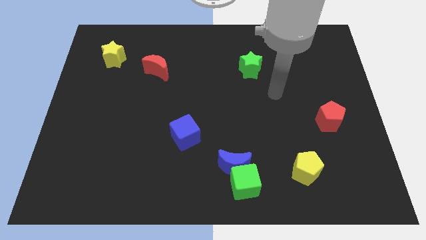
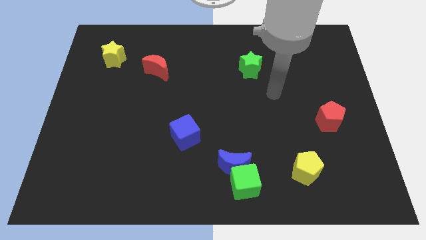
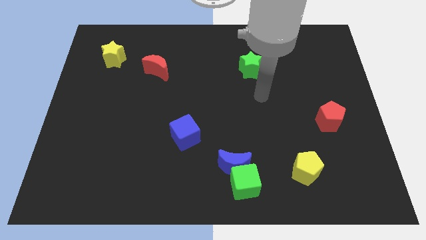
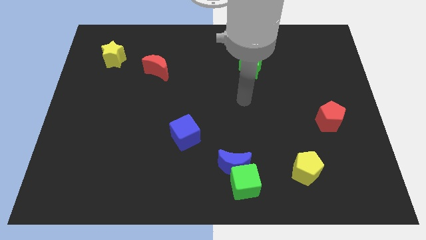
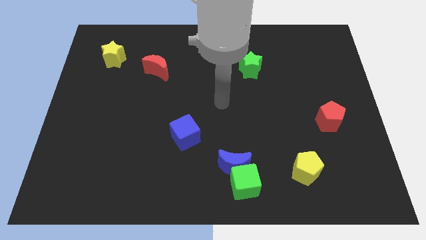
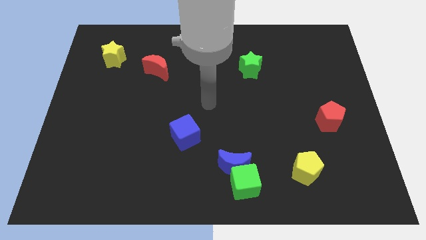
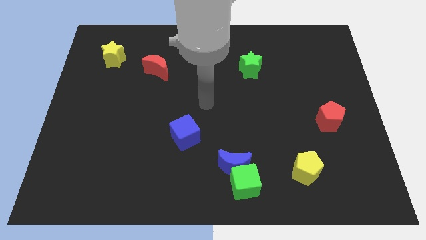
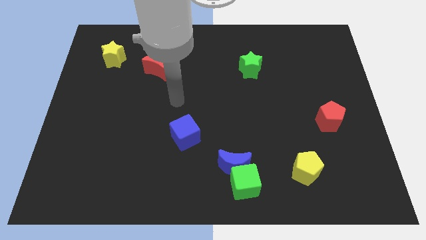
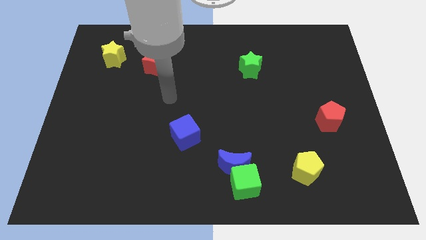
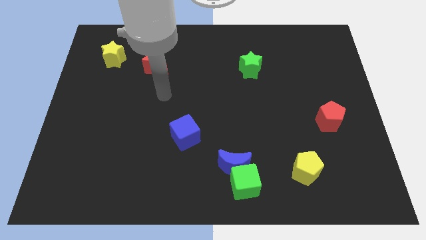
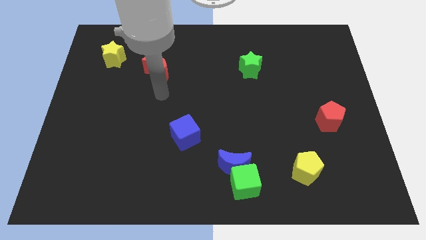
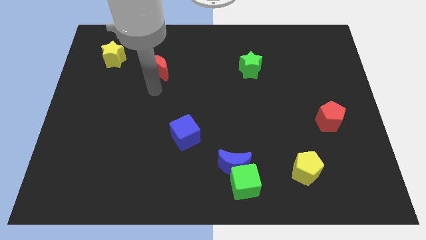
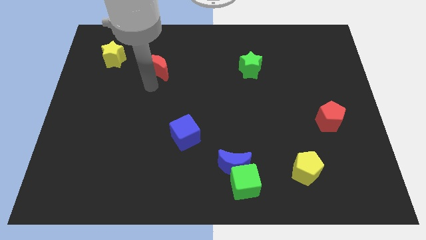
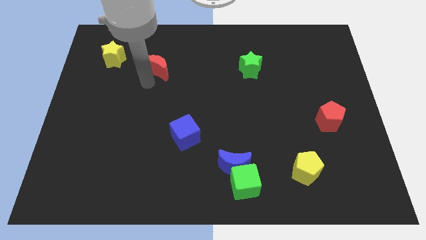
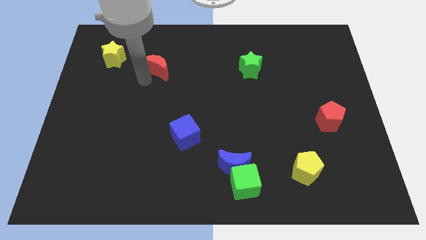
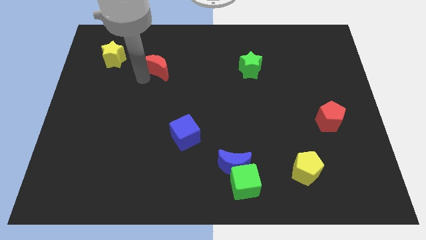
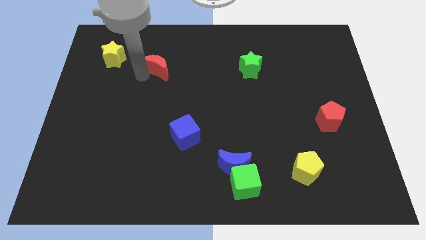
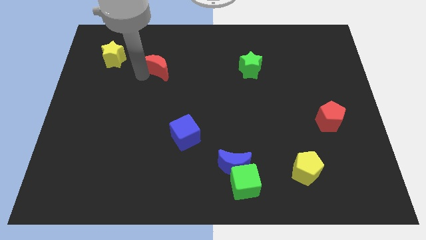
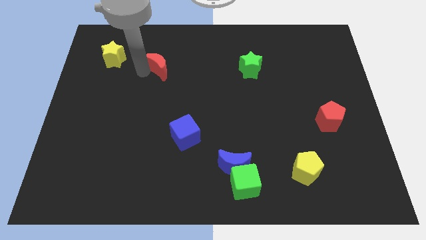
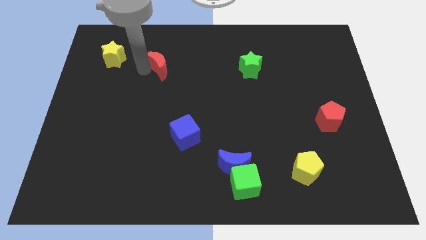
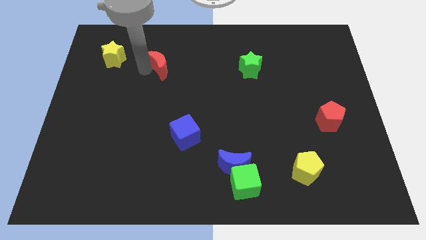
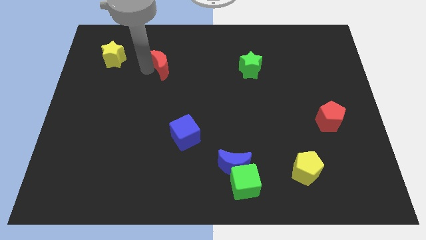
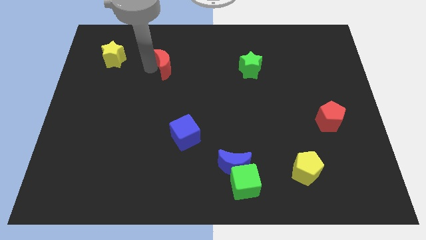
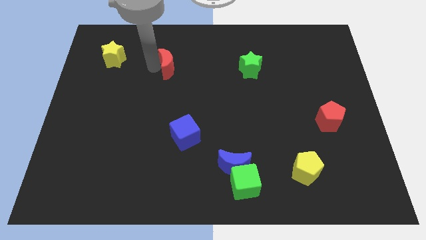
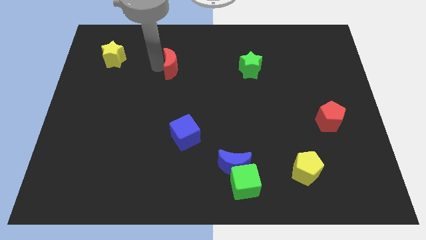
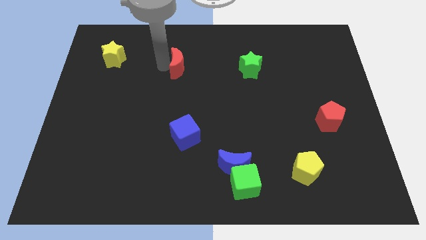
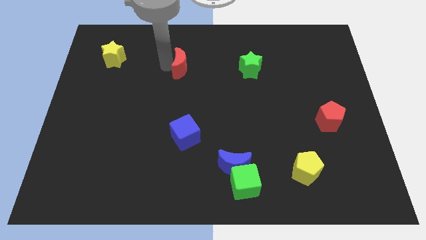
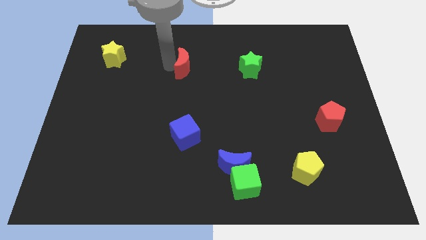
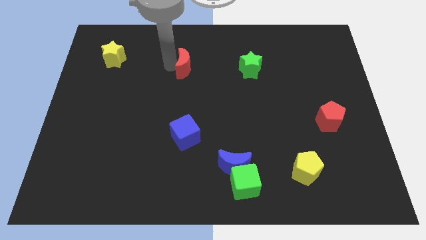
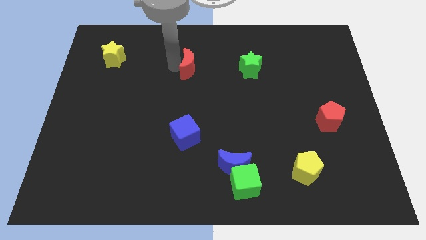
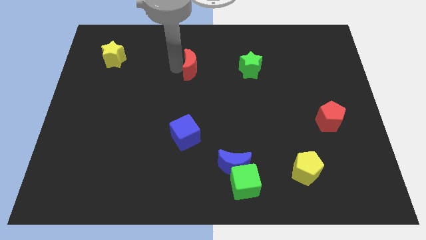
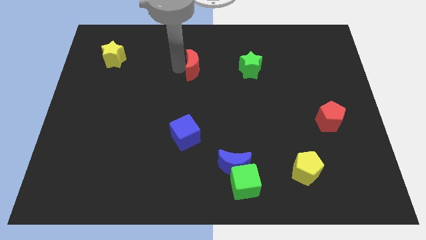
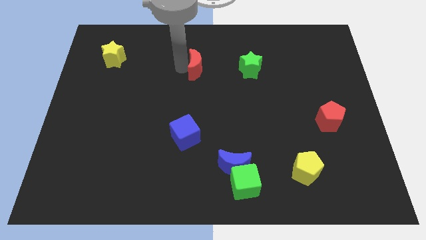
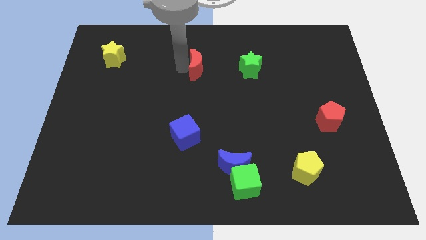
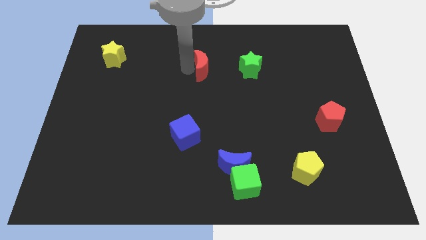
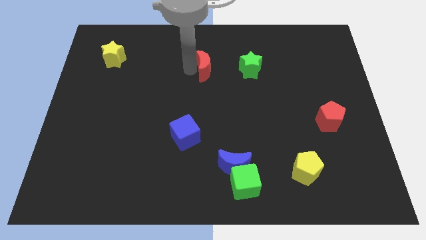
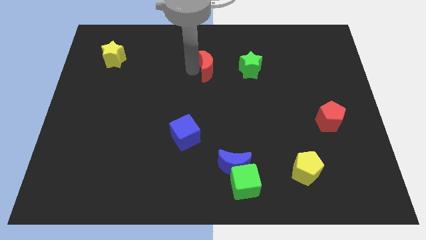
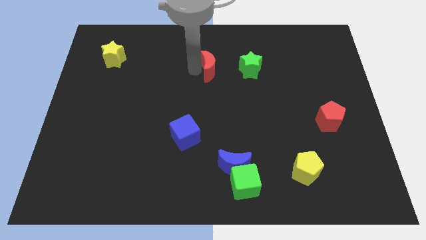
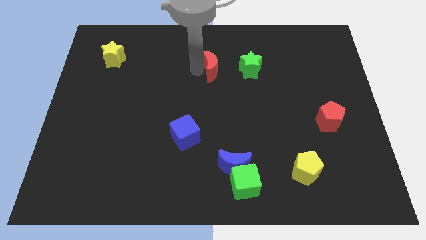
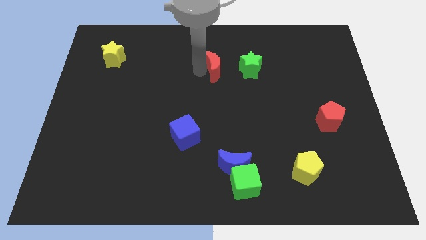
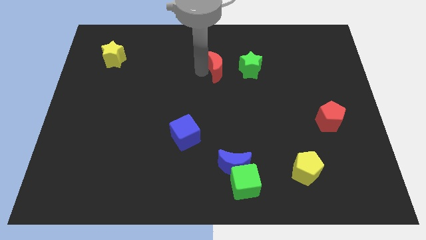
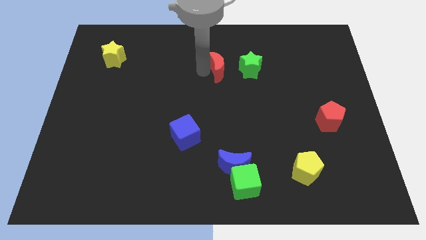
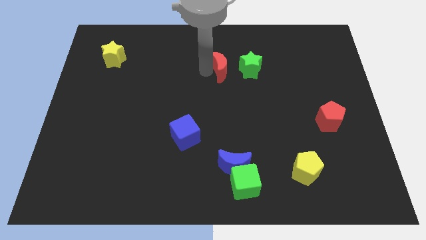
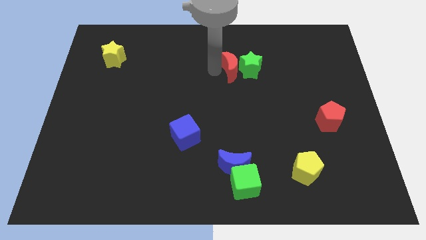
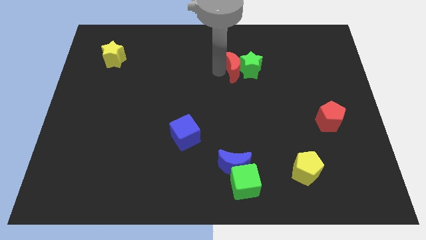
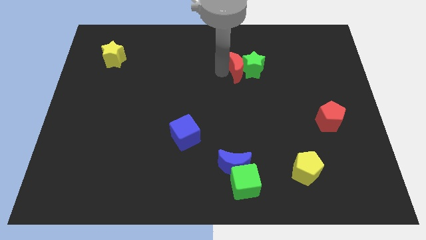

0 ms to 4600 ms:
move the red moon next to the green star

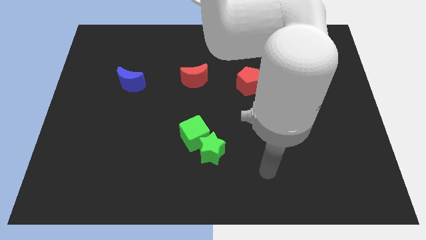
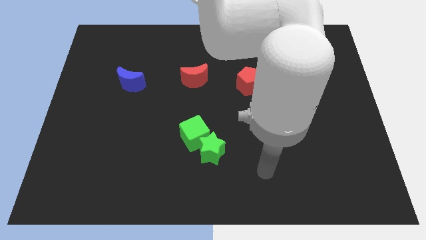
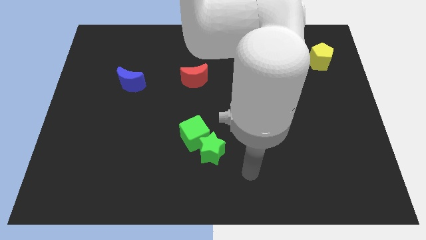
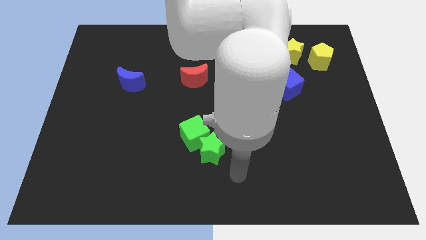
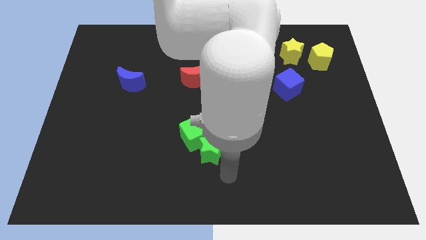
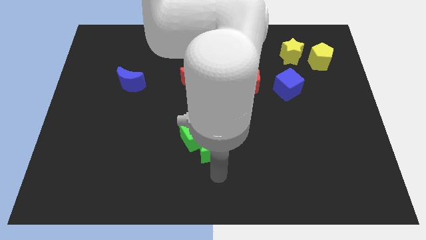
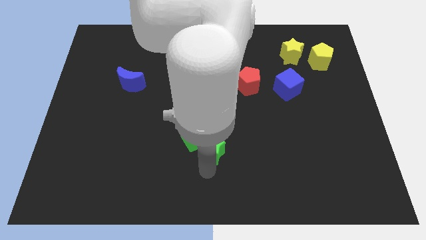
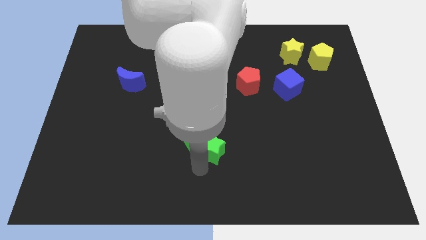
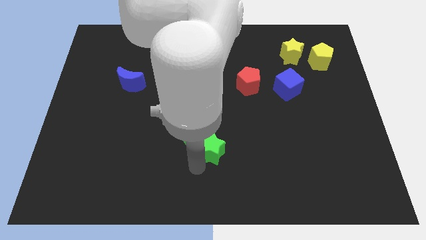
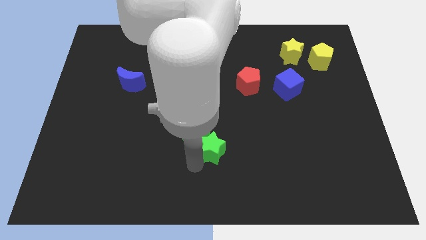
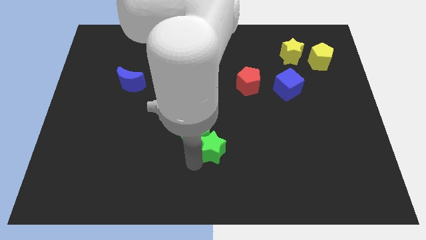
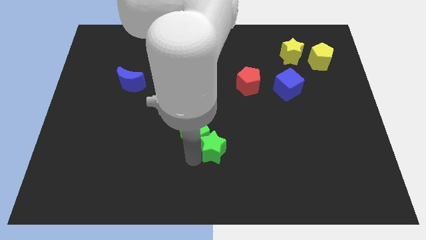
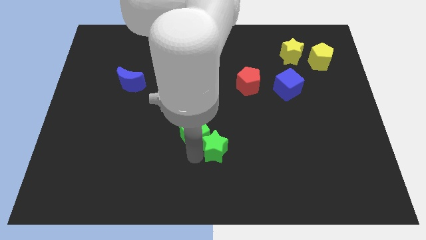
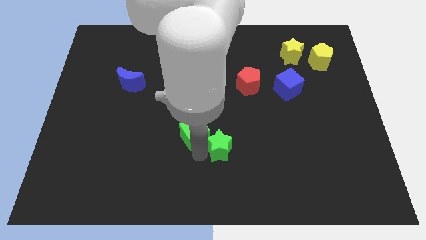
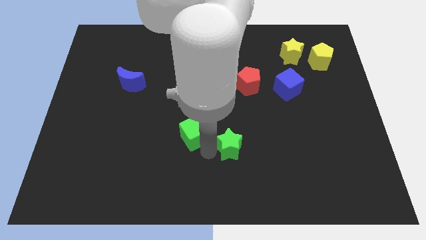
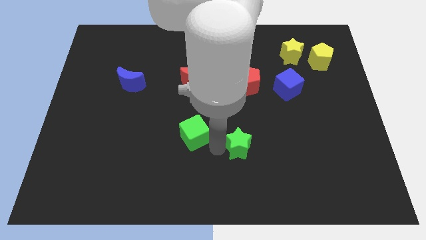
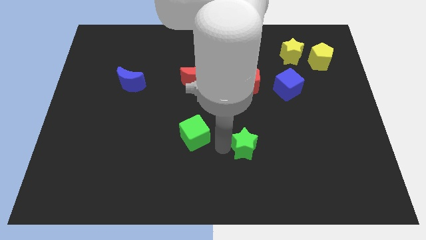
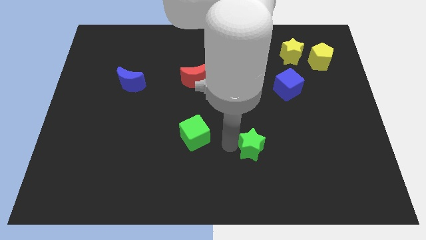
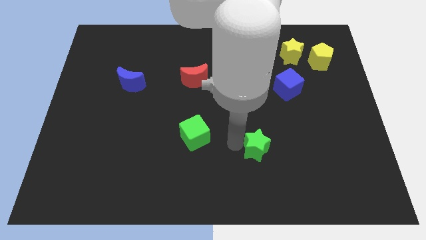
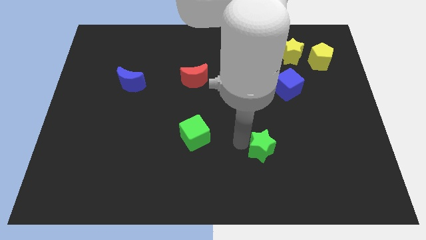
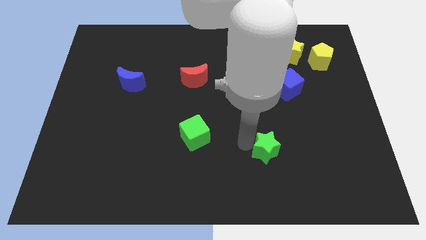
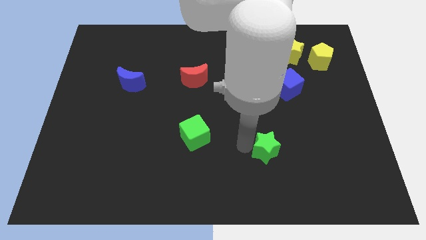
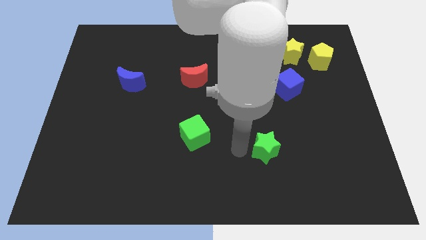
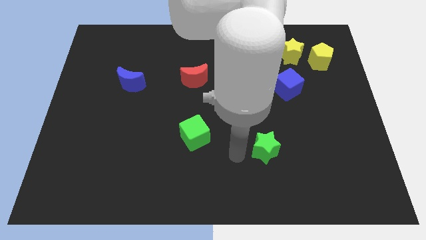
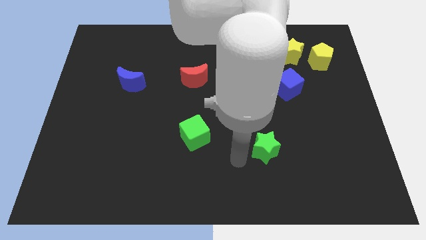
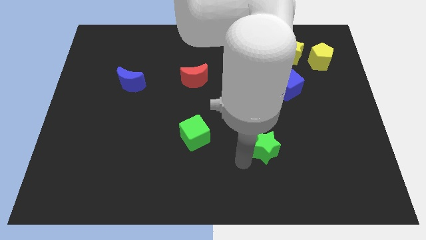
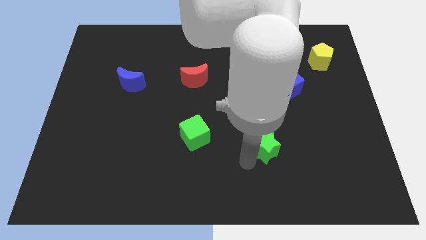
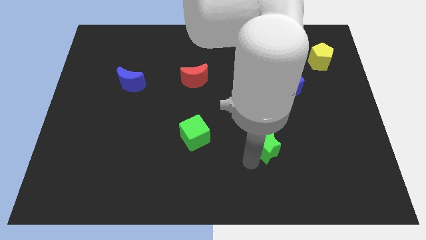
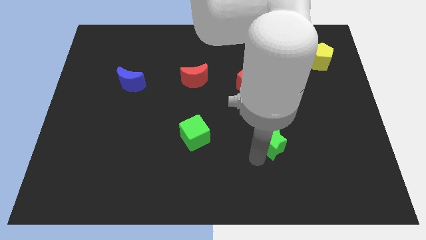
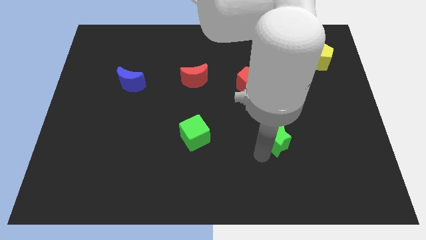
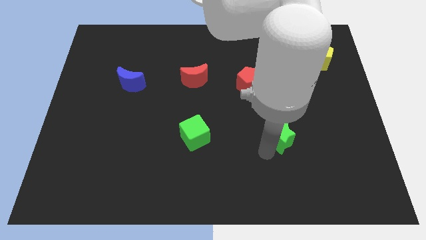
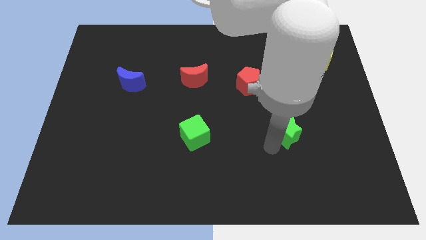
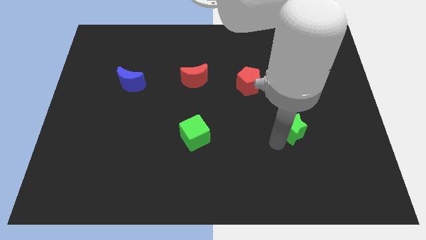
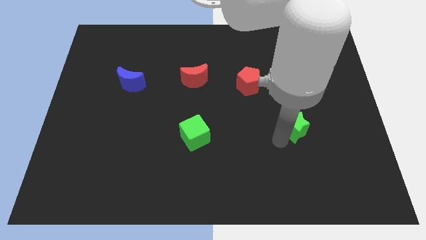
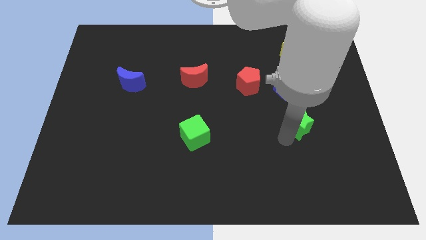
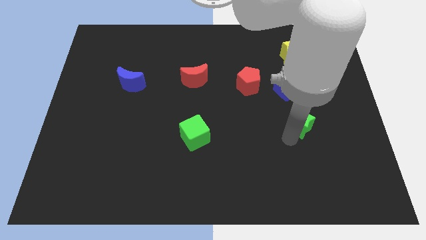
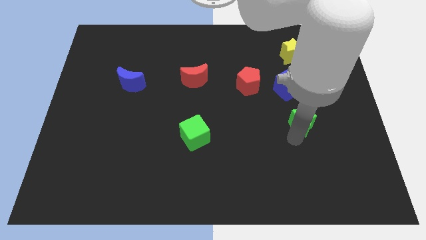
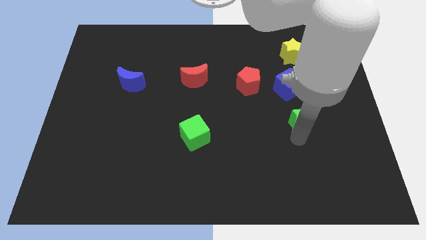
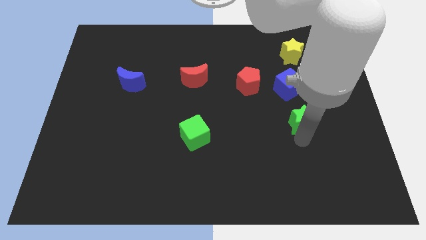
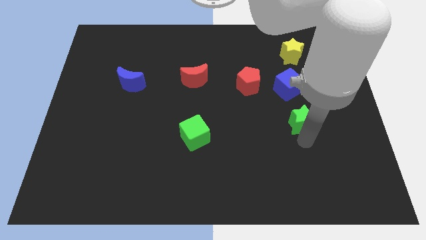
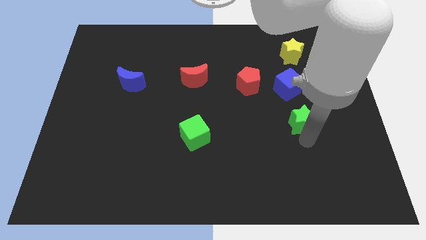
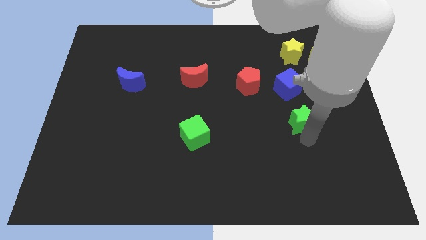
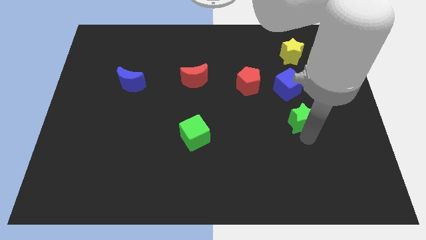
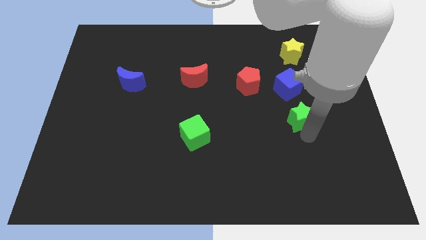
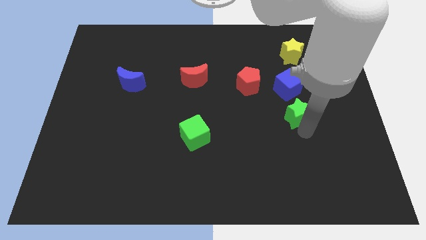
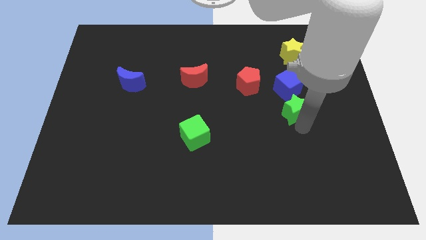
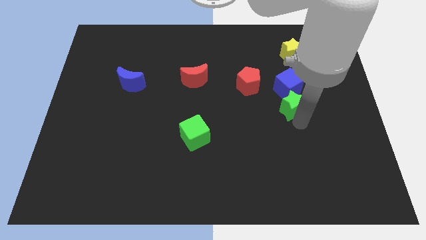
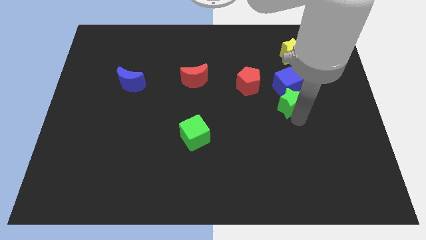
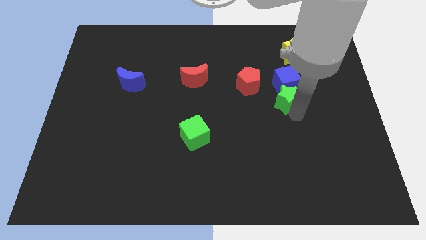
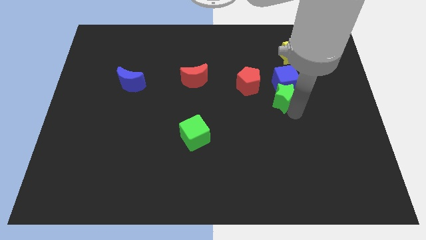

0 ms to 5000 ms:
put the green star to the blue cube
